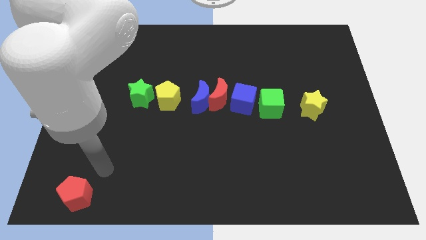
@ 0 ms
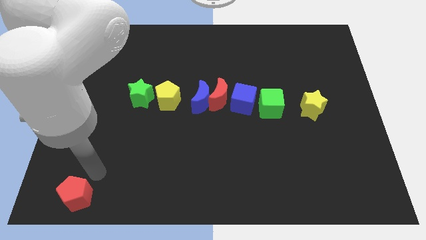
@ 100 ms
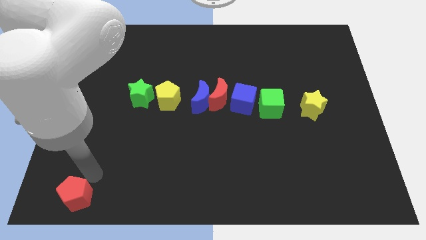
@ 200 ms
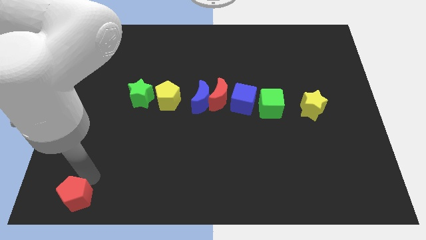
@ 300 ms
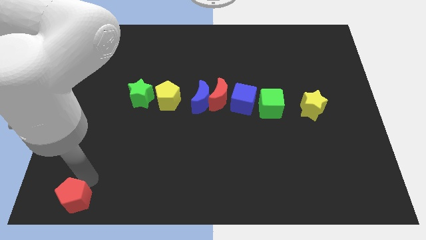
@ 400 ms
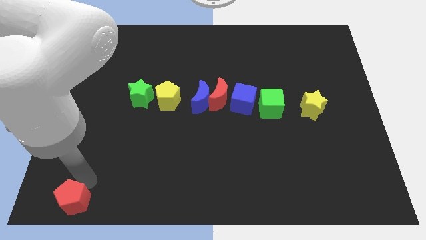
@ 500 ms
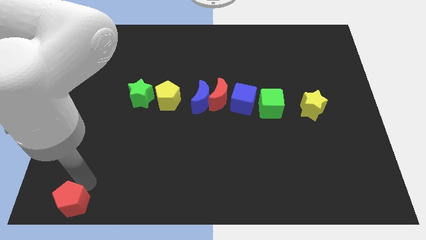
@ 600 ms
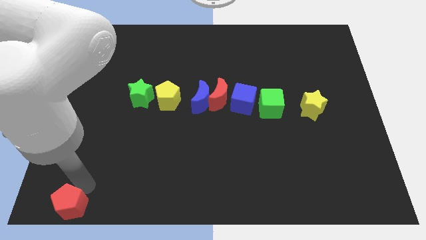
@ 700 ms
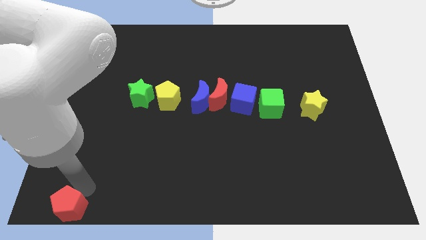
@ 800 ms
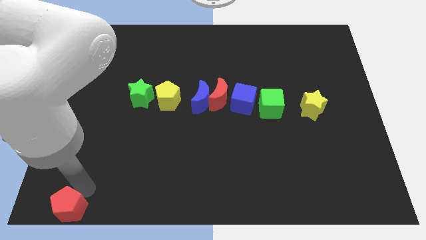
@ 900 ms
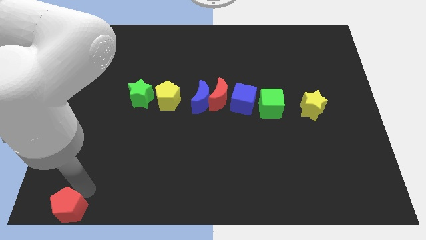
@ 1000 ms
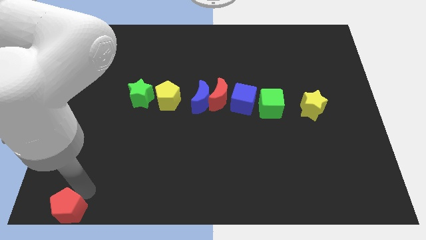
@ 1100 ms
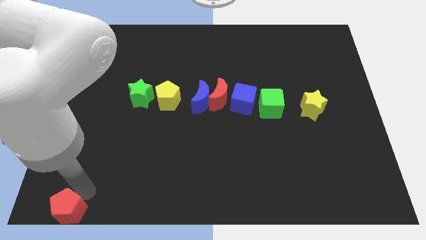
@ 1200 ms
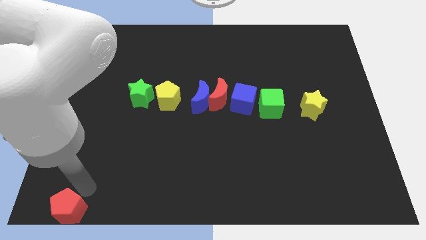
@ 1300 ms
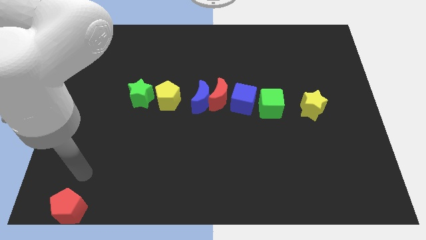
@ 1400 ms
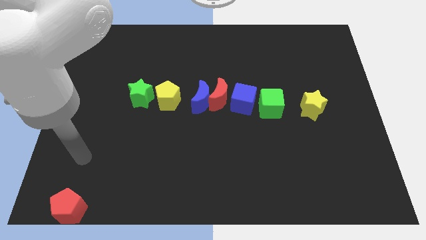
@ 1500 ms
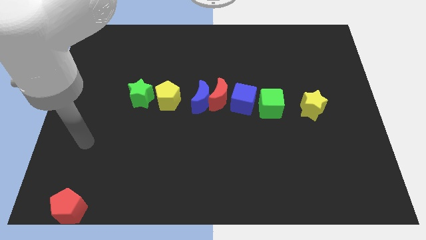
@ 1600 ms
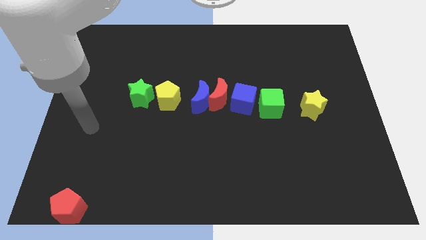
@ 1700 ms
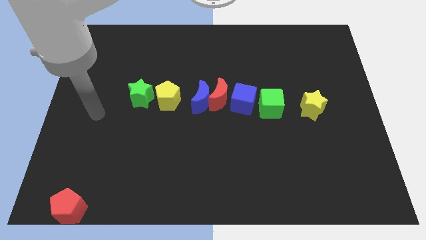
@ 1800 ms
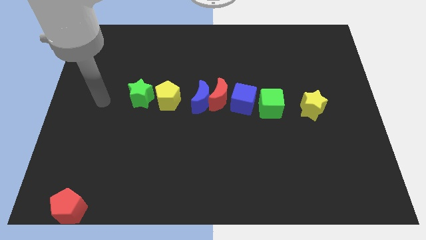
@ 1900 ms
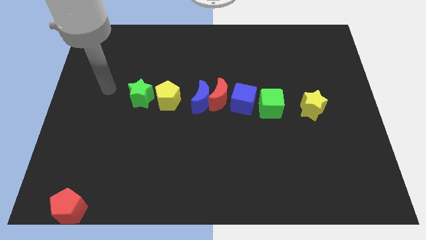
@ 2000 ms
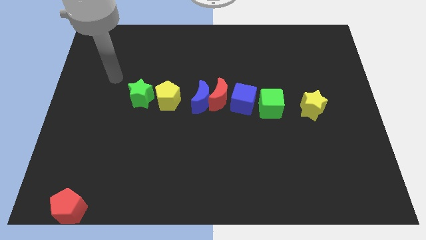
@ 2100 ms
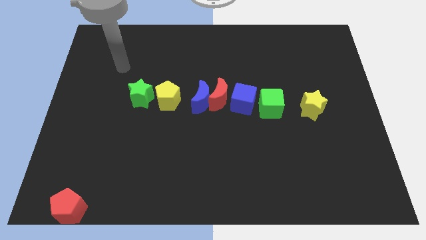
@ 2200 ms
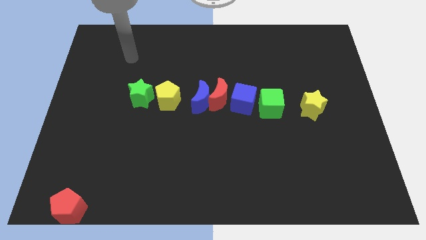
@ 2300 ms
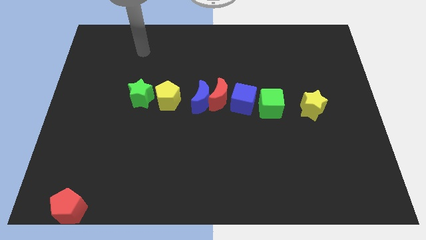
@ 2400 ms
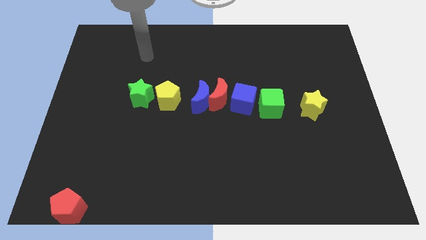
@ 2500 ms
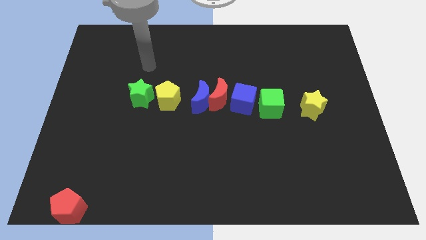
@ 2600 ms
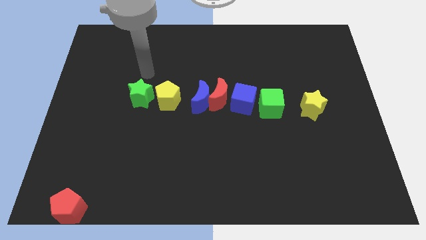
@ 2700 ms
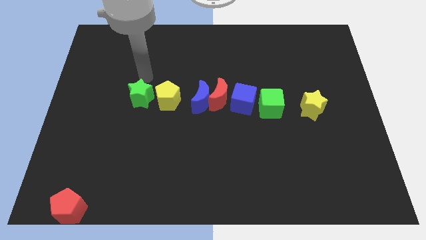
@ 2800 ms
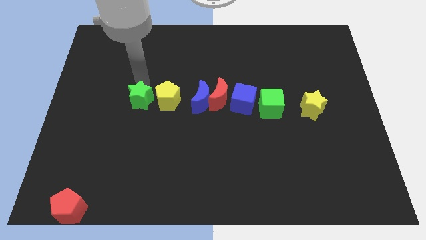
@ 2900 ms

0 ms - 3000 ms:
slightly push the red pentagon to the bottom left side of the board

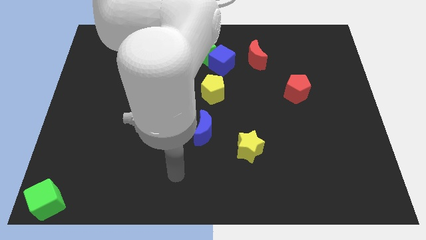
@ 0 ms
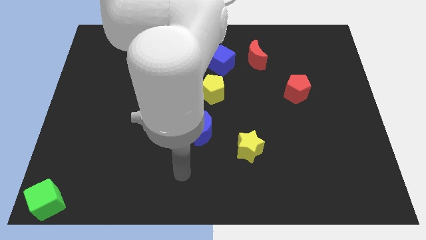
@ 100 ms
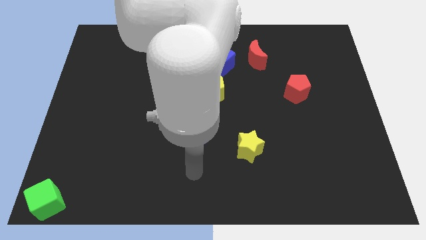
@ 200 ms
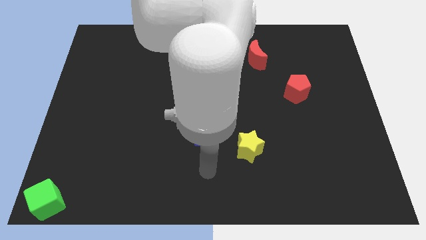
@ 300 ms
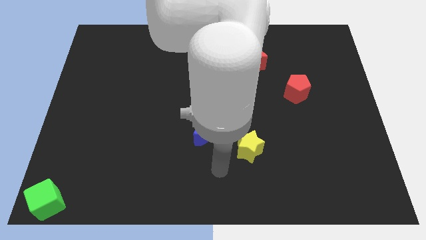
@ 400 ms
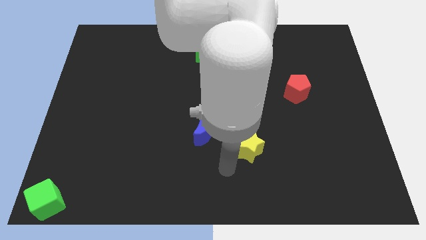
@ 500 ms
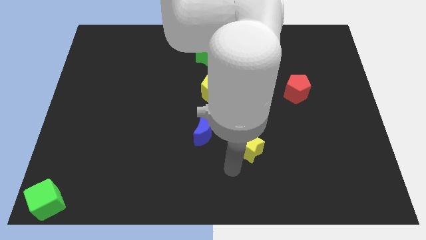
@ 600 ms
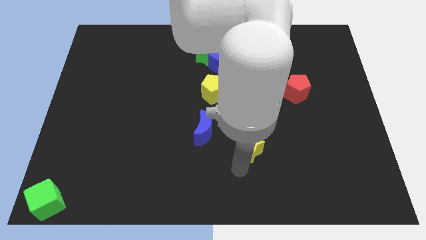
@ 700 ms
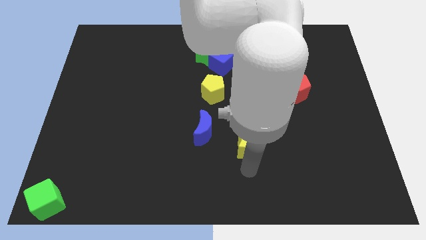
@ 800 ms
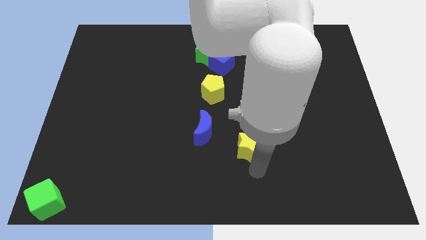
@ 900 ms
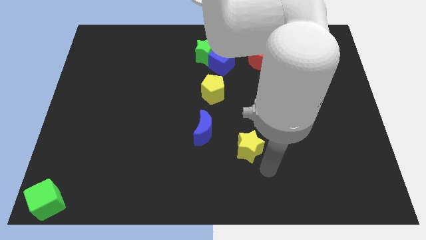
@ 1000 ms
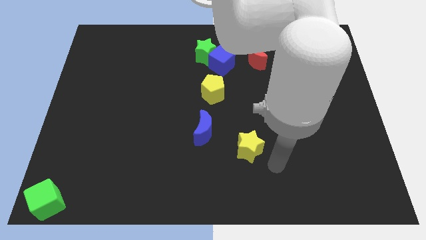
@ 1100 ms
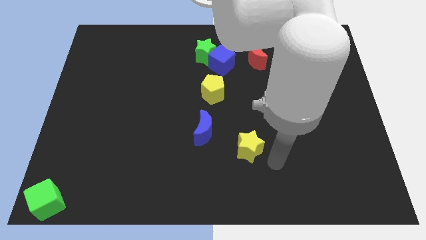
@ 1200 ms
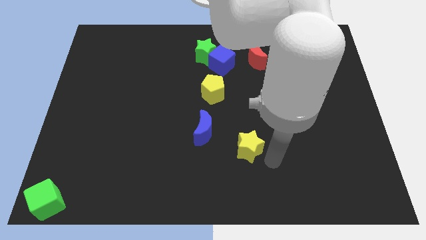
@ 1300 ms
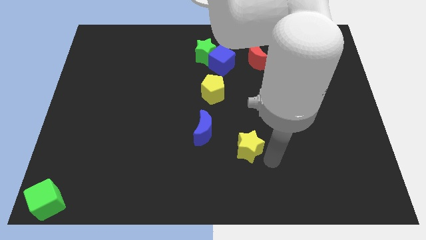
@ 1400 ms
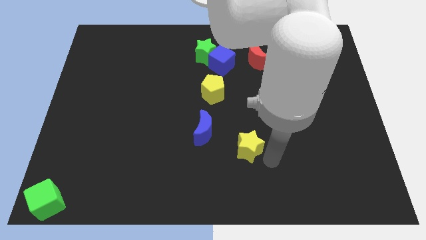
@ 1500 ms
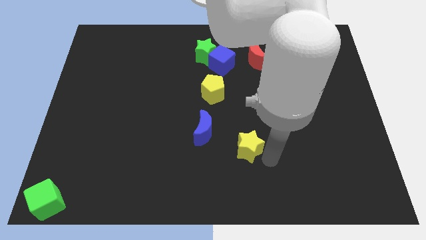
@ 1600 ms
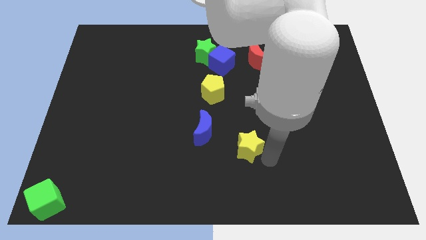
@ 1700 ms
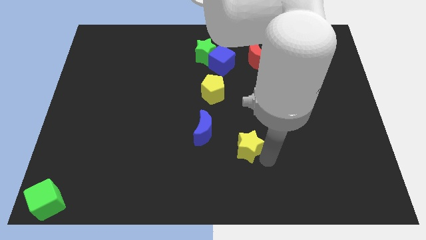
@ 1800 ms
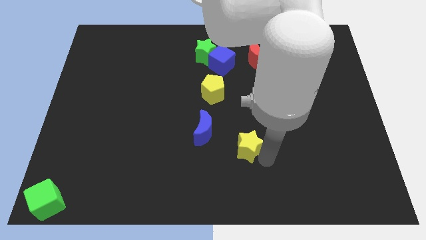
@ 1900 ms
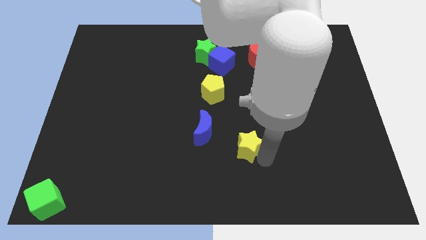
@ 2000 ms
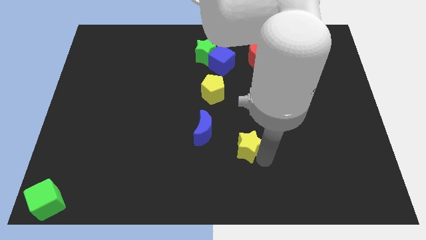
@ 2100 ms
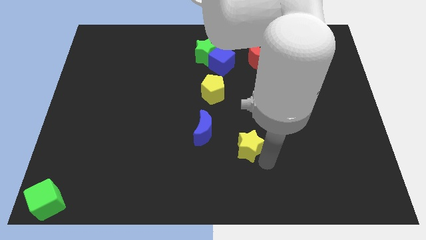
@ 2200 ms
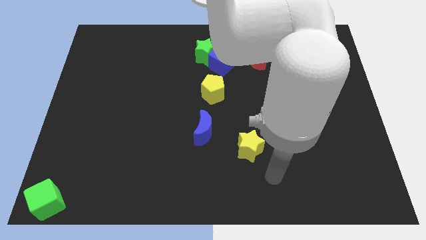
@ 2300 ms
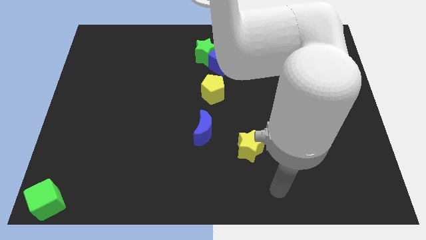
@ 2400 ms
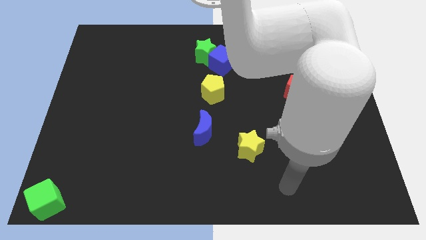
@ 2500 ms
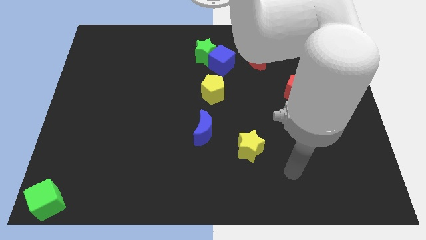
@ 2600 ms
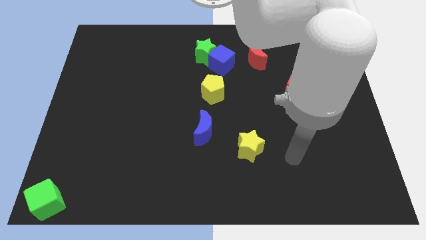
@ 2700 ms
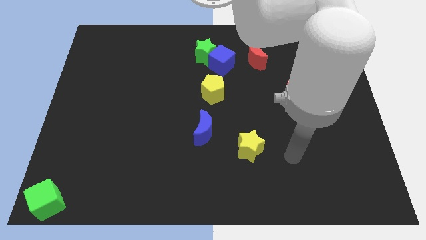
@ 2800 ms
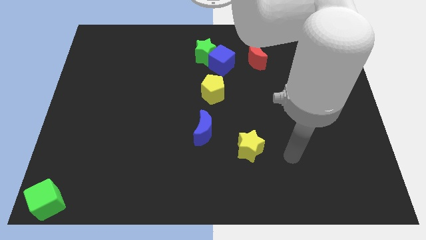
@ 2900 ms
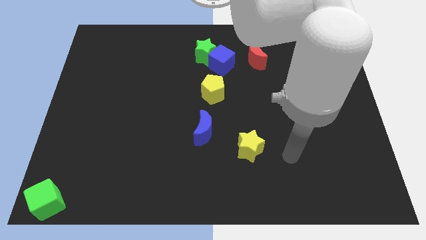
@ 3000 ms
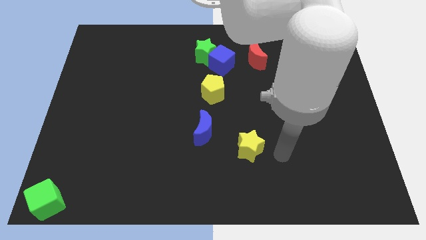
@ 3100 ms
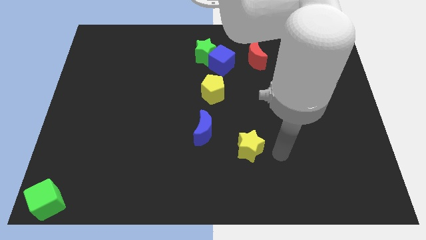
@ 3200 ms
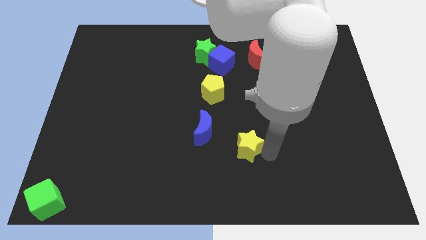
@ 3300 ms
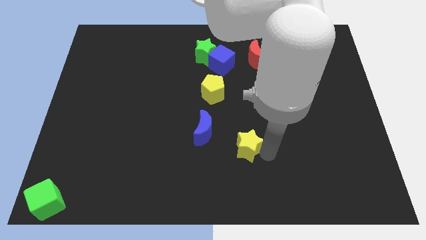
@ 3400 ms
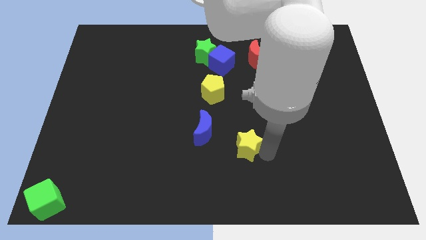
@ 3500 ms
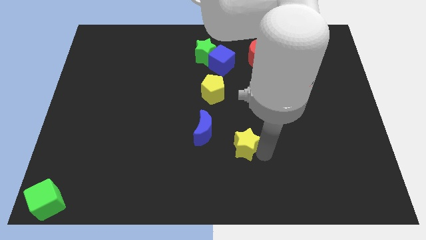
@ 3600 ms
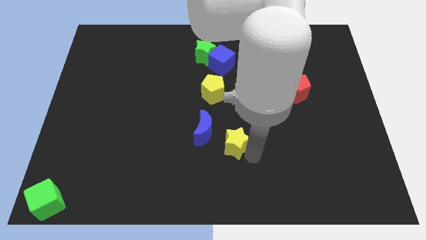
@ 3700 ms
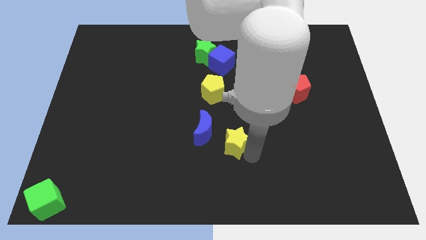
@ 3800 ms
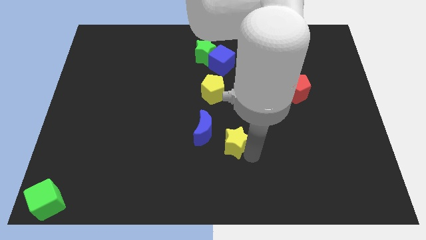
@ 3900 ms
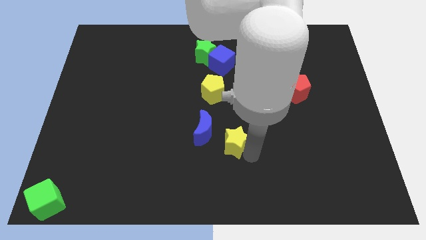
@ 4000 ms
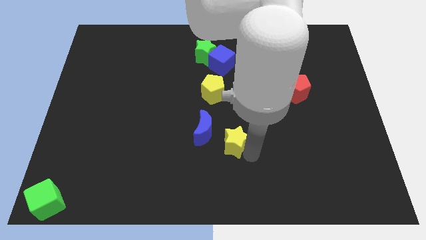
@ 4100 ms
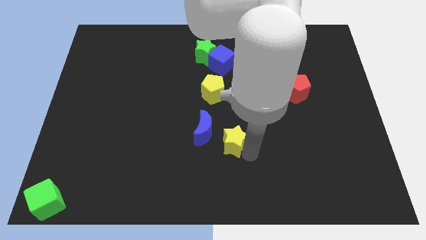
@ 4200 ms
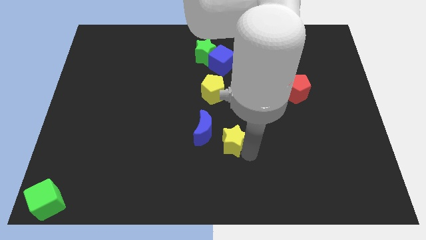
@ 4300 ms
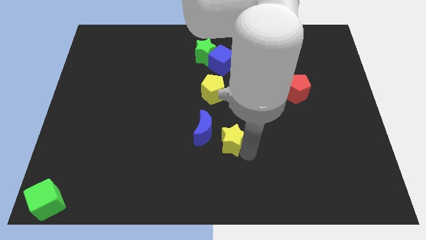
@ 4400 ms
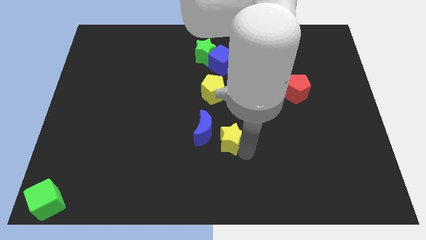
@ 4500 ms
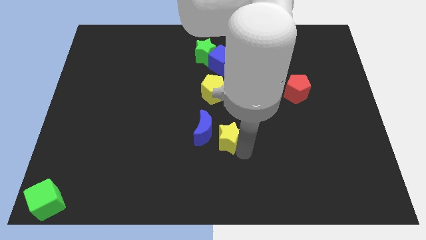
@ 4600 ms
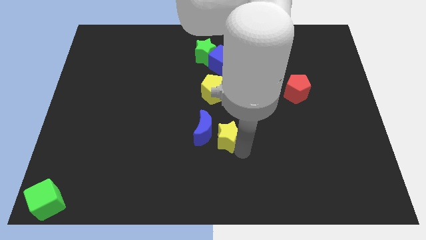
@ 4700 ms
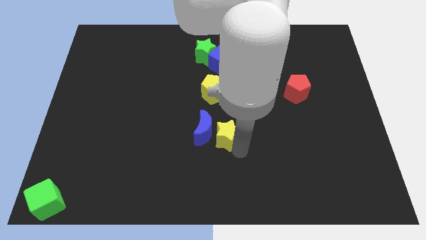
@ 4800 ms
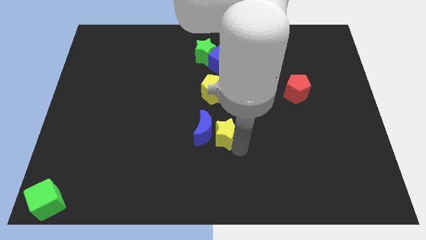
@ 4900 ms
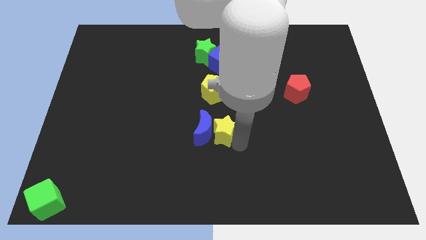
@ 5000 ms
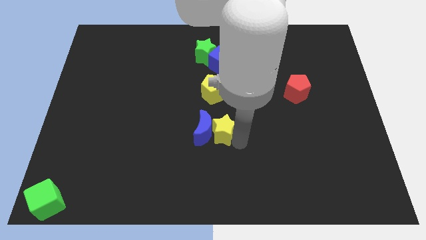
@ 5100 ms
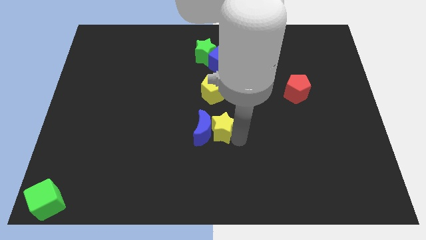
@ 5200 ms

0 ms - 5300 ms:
slide the yellow star to the right side of the blue moon

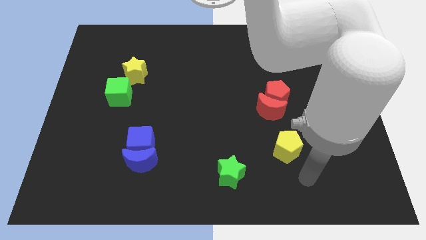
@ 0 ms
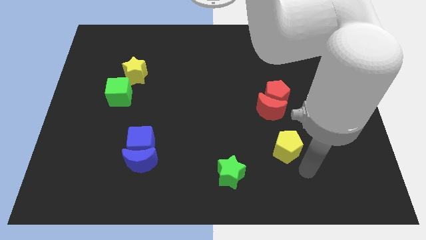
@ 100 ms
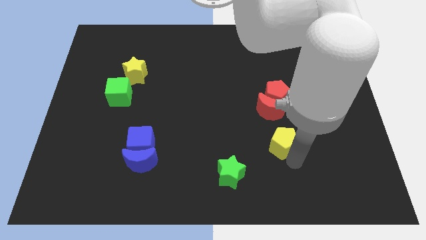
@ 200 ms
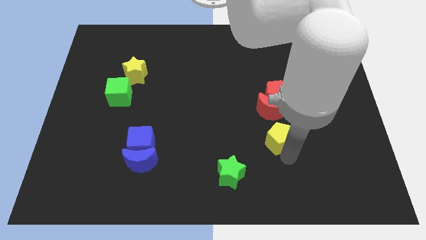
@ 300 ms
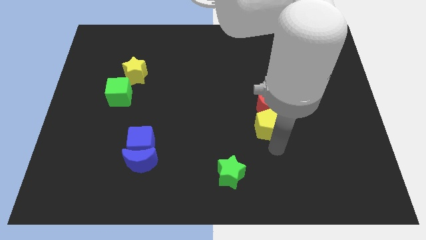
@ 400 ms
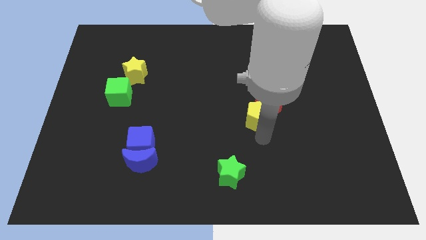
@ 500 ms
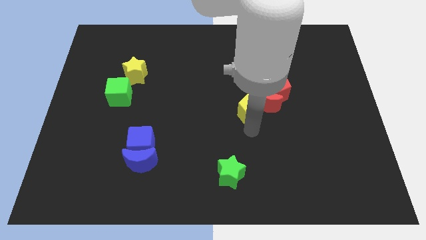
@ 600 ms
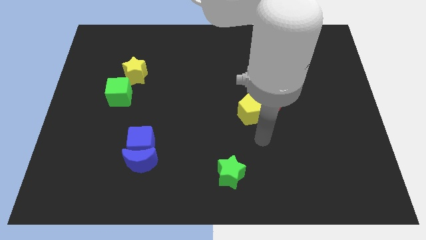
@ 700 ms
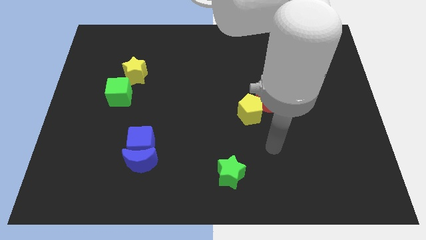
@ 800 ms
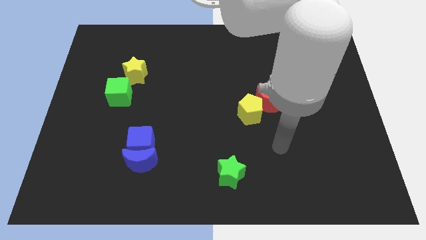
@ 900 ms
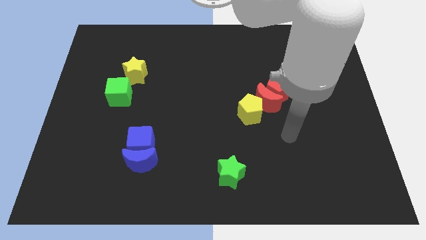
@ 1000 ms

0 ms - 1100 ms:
push the yellow pentagon to the left of the red crescent
